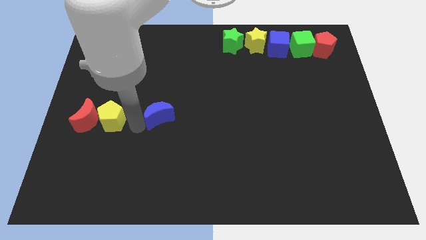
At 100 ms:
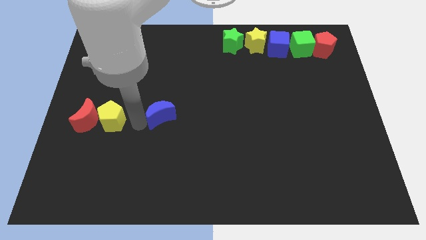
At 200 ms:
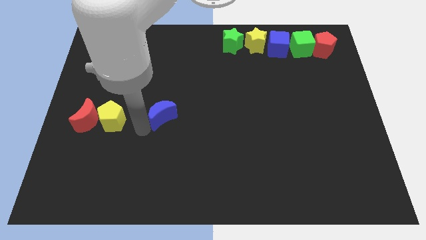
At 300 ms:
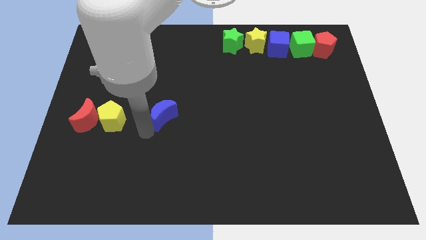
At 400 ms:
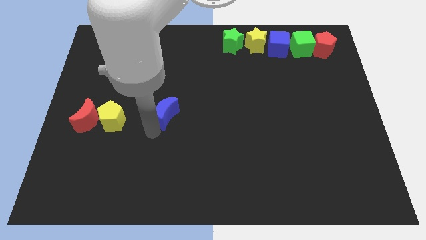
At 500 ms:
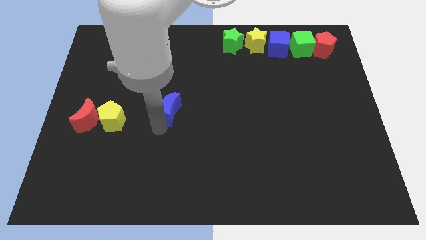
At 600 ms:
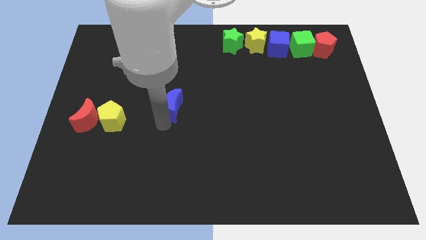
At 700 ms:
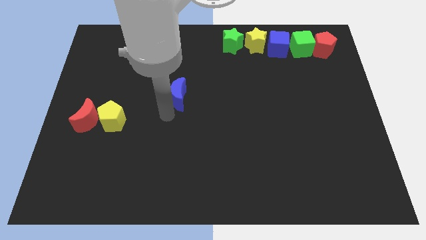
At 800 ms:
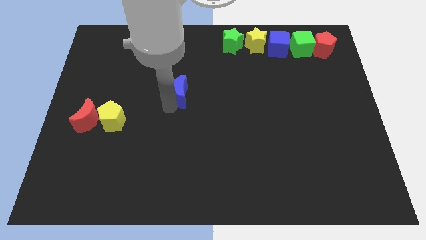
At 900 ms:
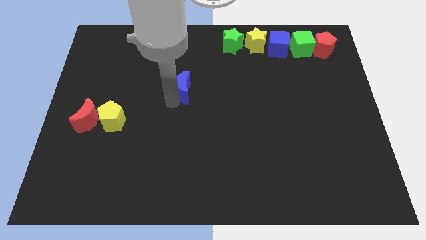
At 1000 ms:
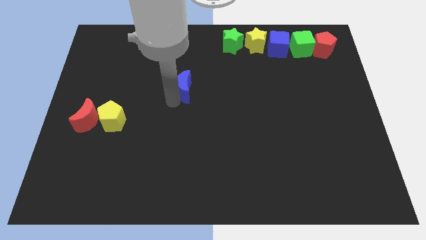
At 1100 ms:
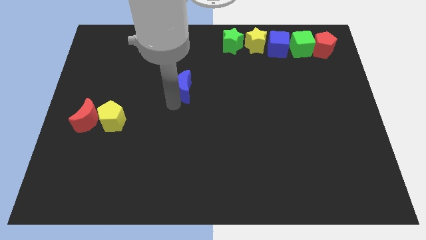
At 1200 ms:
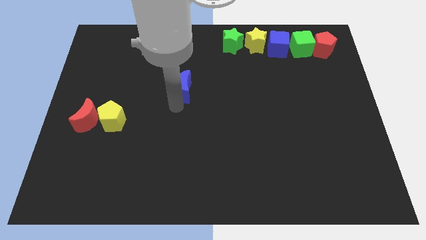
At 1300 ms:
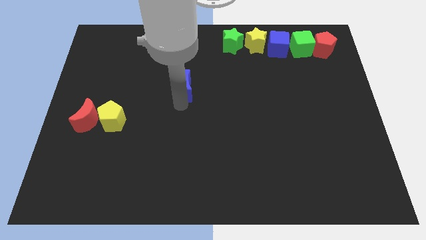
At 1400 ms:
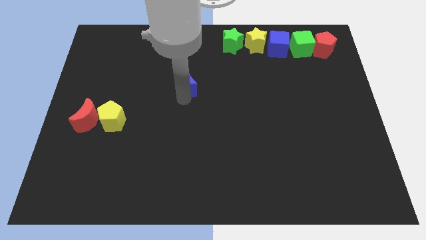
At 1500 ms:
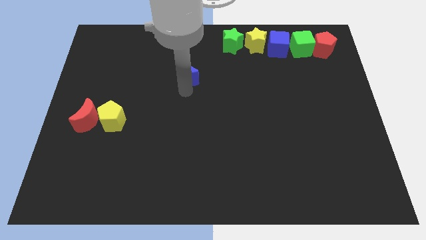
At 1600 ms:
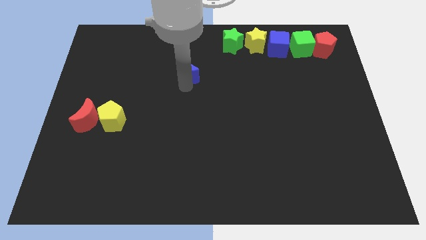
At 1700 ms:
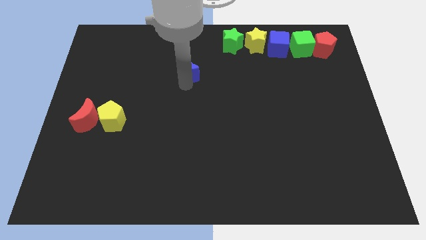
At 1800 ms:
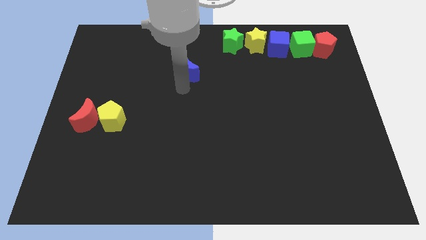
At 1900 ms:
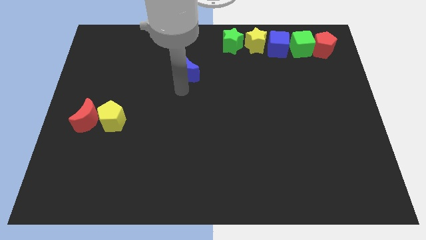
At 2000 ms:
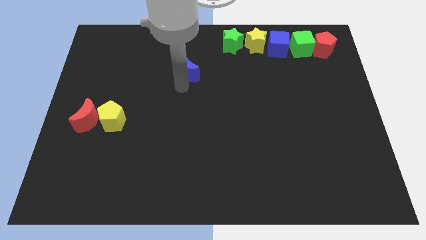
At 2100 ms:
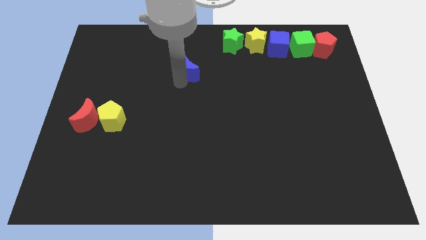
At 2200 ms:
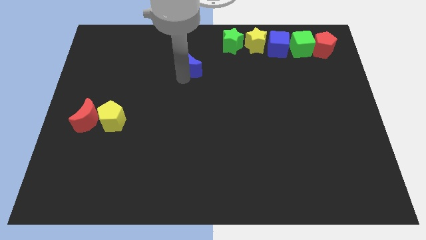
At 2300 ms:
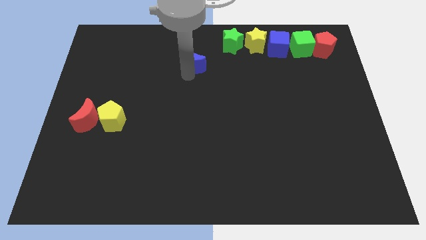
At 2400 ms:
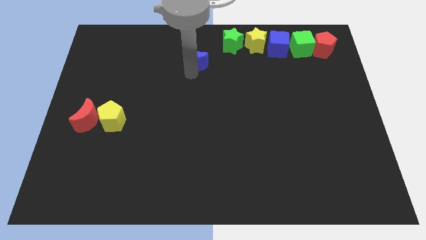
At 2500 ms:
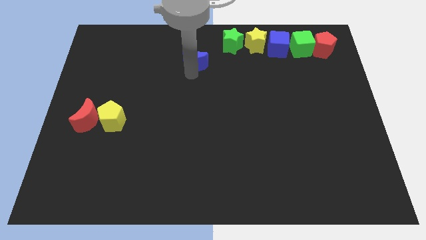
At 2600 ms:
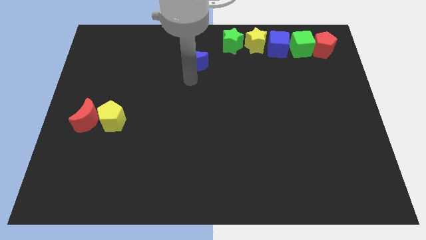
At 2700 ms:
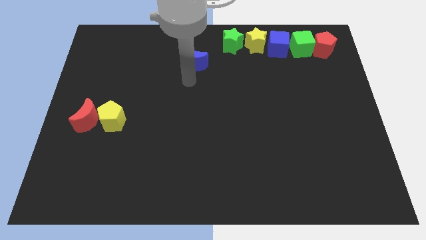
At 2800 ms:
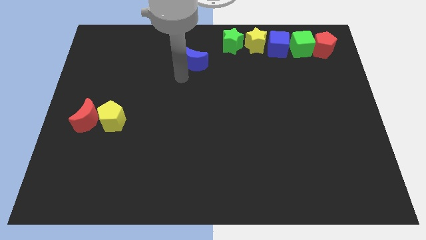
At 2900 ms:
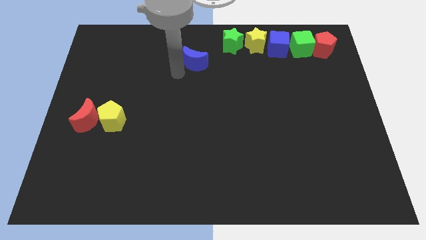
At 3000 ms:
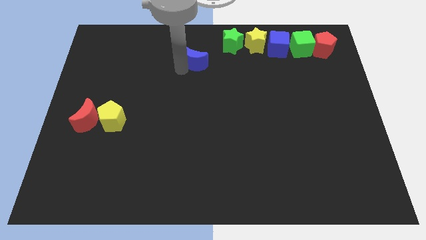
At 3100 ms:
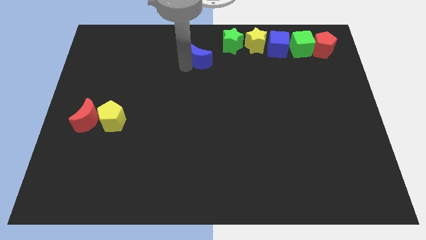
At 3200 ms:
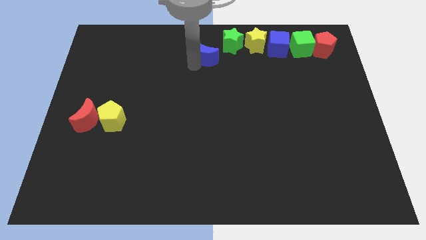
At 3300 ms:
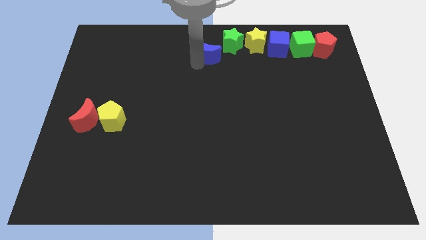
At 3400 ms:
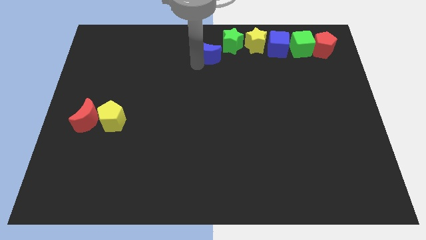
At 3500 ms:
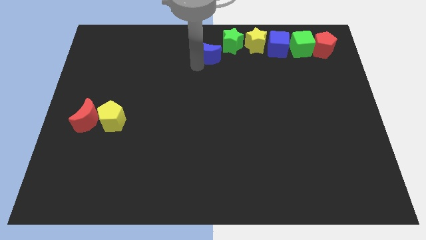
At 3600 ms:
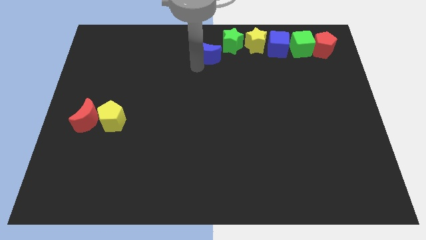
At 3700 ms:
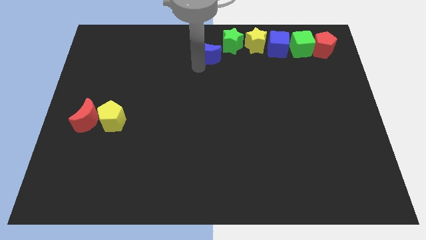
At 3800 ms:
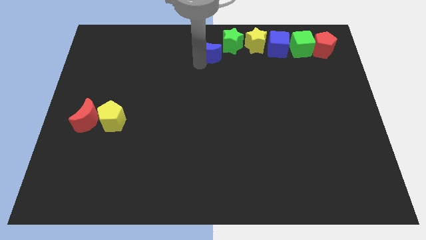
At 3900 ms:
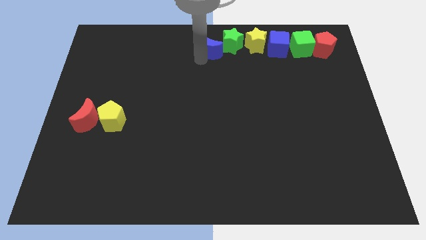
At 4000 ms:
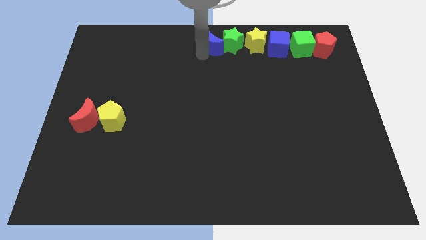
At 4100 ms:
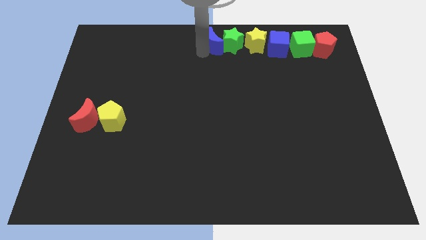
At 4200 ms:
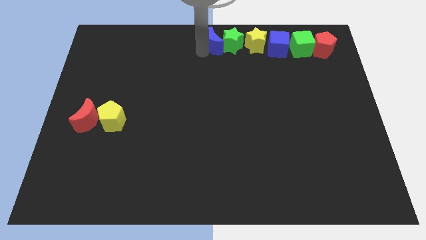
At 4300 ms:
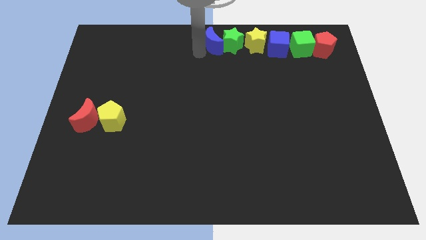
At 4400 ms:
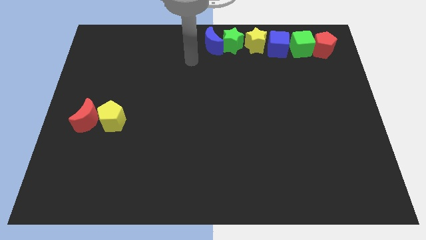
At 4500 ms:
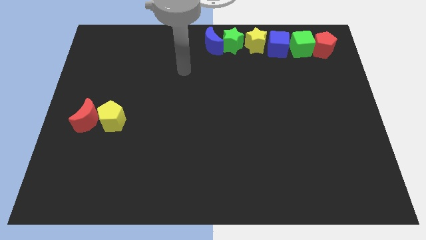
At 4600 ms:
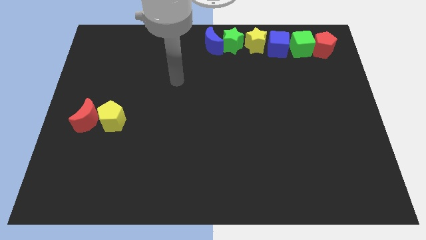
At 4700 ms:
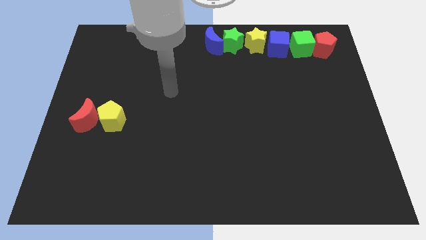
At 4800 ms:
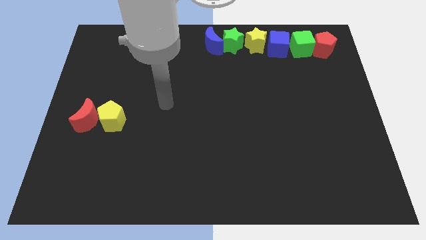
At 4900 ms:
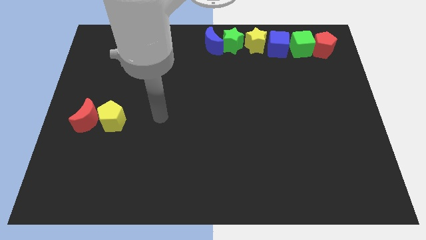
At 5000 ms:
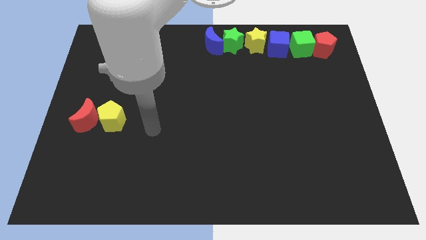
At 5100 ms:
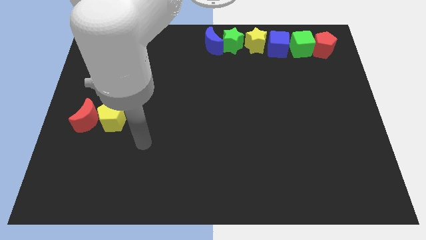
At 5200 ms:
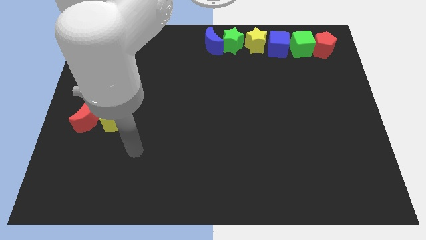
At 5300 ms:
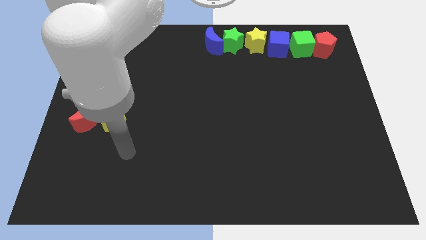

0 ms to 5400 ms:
push the blue moon to the left of the green star

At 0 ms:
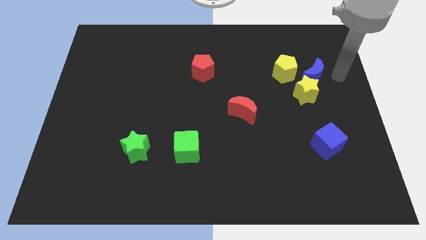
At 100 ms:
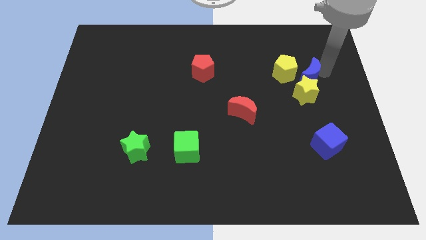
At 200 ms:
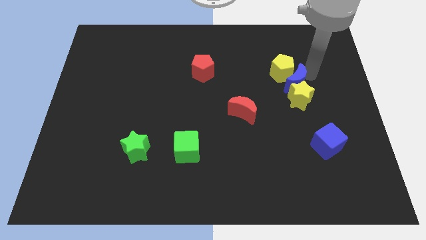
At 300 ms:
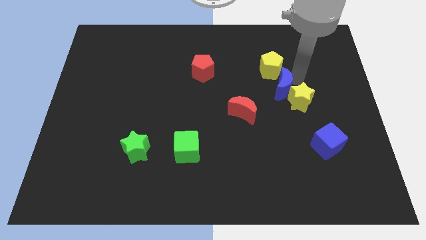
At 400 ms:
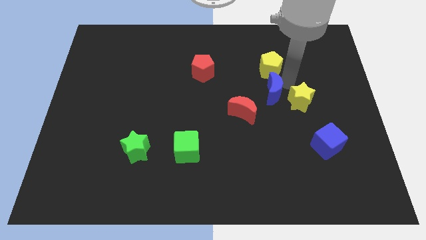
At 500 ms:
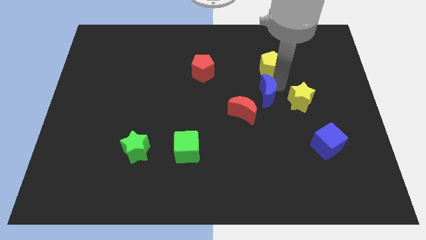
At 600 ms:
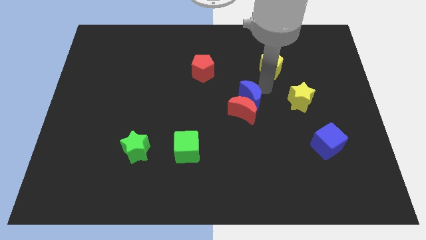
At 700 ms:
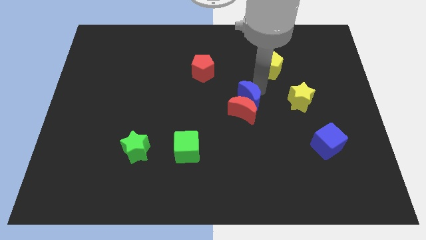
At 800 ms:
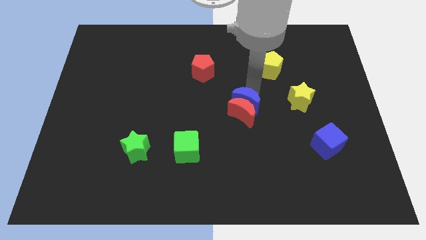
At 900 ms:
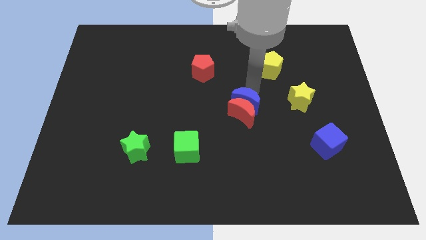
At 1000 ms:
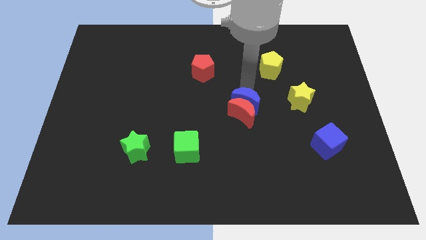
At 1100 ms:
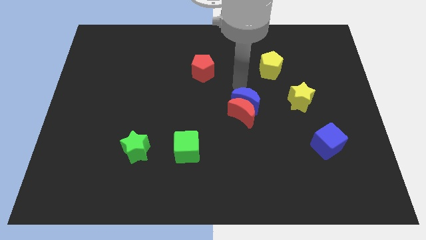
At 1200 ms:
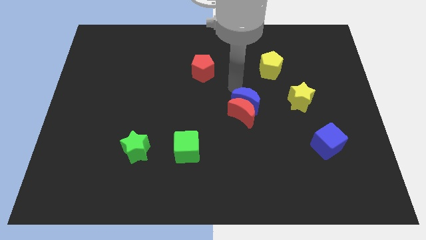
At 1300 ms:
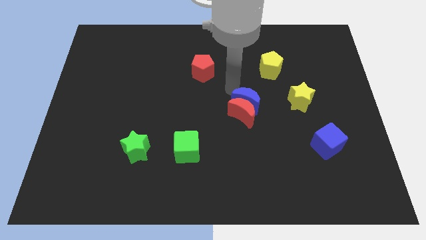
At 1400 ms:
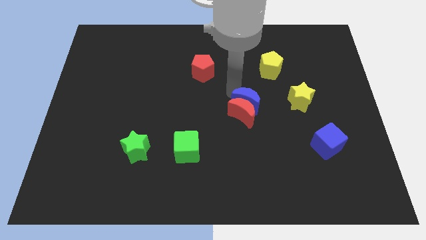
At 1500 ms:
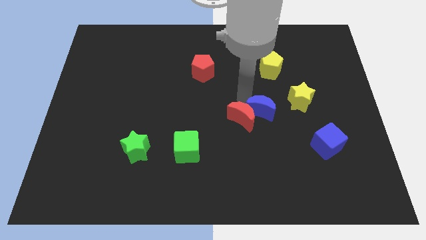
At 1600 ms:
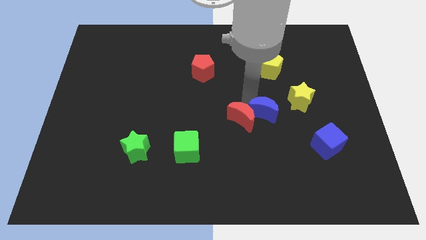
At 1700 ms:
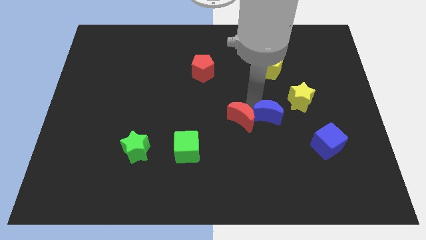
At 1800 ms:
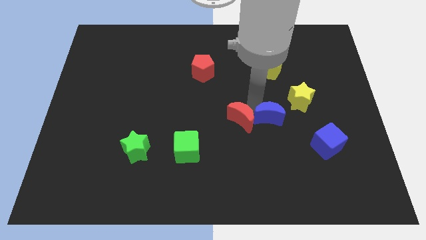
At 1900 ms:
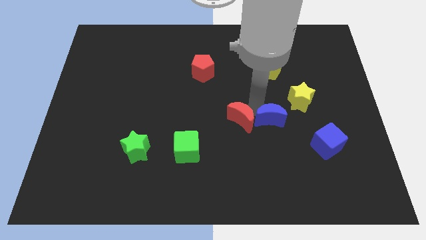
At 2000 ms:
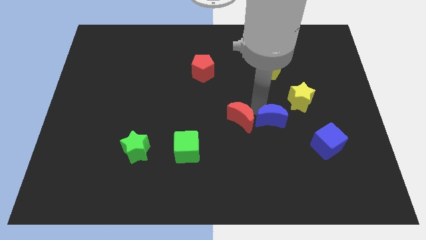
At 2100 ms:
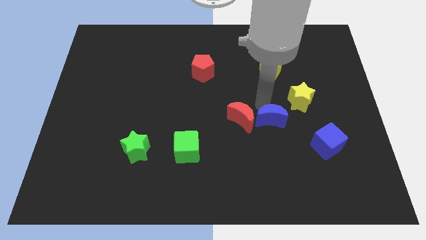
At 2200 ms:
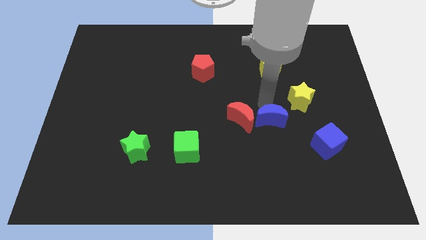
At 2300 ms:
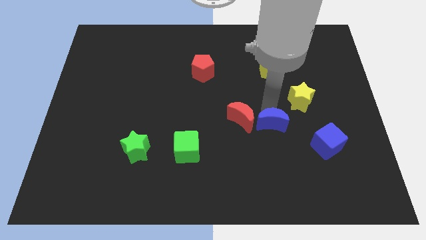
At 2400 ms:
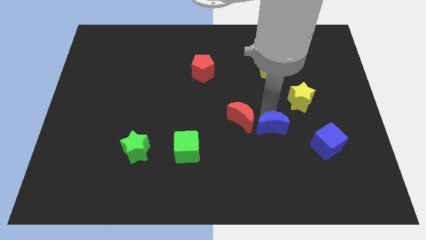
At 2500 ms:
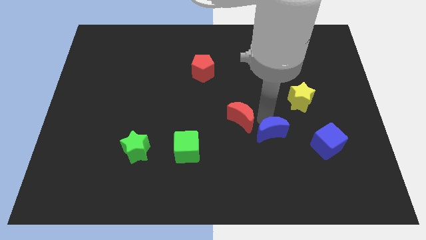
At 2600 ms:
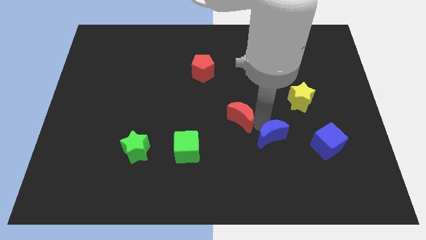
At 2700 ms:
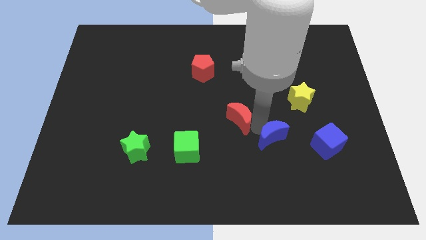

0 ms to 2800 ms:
push the blue crescent into the red crescent

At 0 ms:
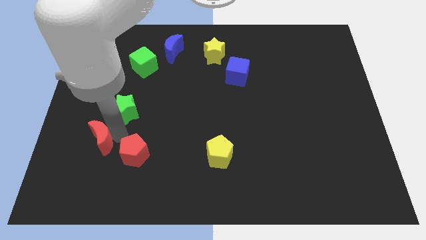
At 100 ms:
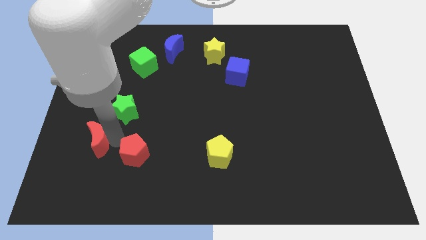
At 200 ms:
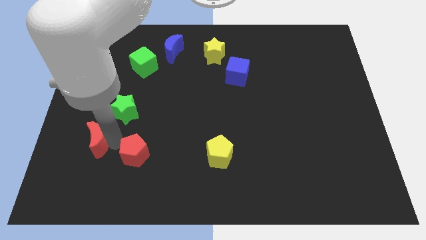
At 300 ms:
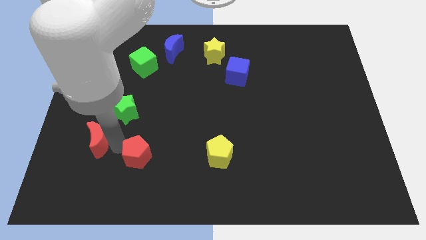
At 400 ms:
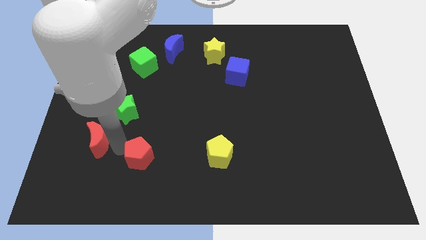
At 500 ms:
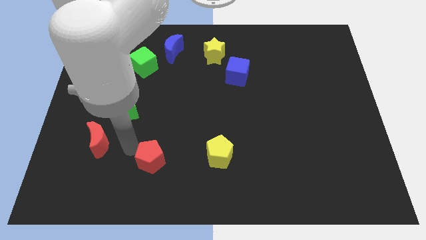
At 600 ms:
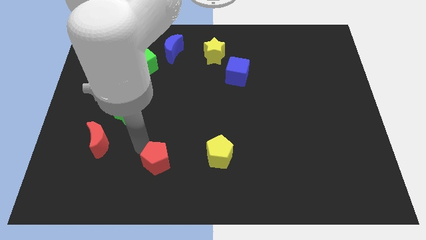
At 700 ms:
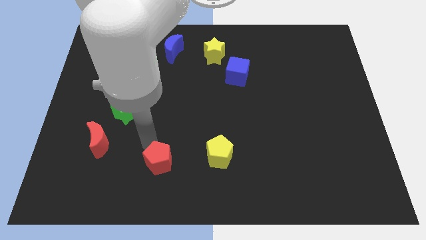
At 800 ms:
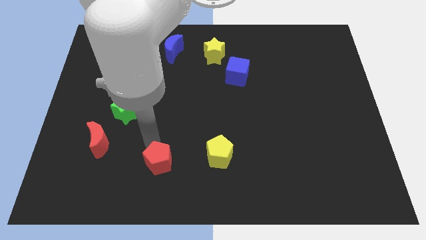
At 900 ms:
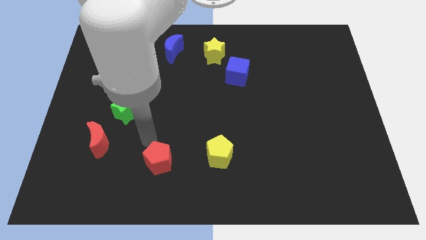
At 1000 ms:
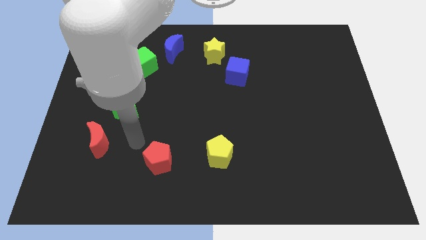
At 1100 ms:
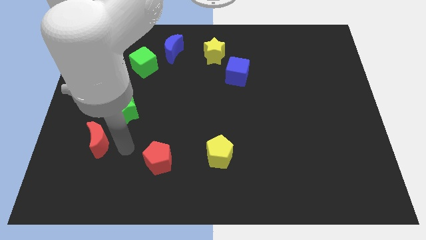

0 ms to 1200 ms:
separate red pentagon from red moon
